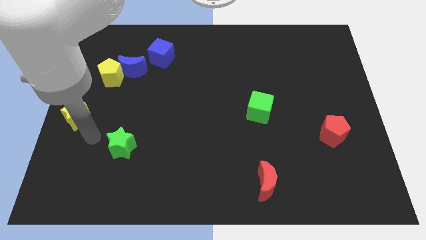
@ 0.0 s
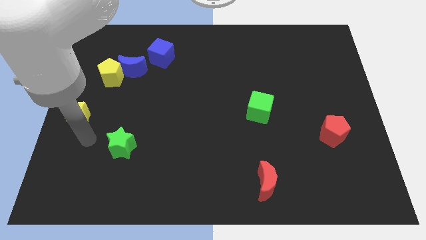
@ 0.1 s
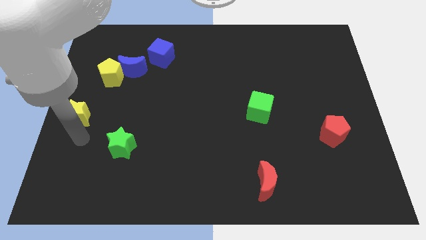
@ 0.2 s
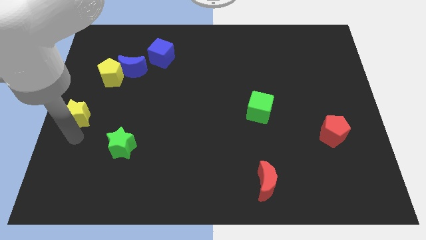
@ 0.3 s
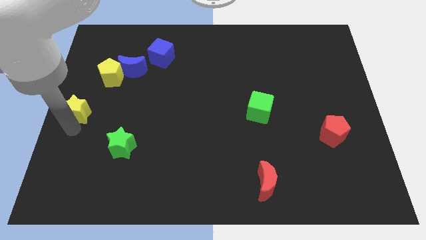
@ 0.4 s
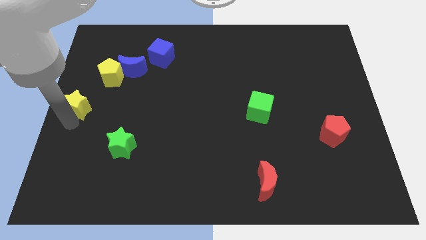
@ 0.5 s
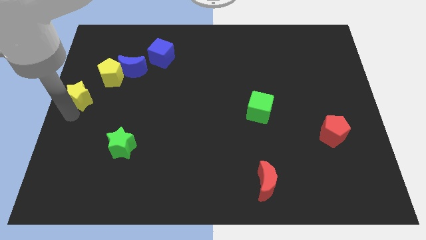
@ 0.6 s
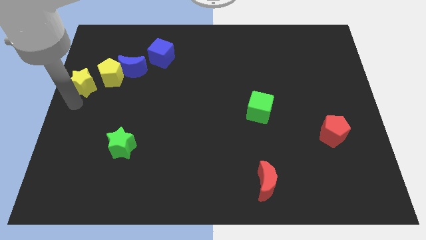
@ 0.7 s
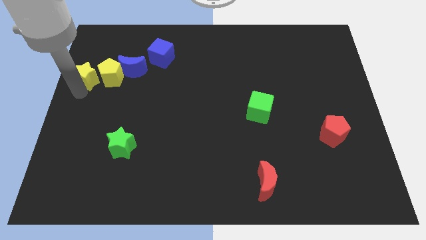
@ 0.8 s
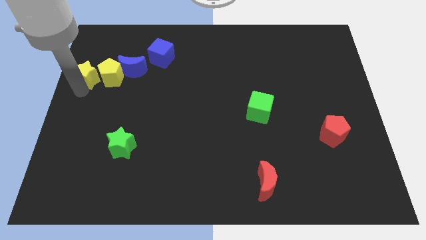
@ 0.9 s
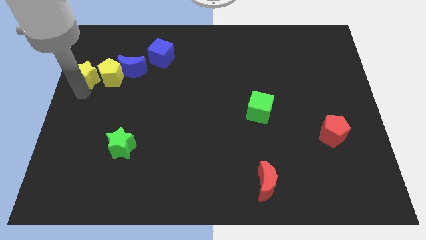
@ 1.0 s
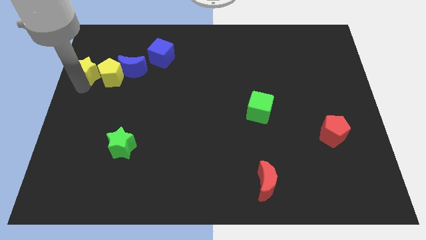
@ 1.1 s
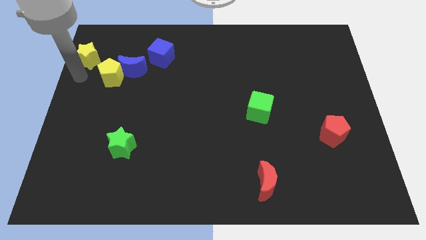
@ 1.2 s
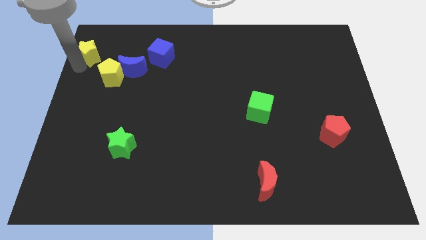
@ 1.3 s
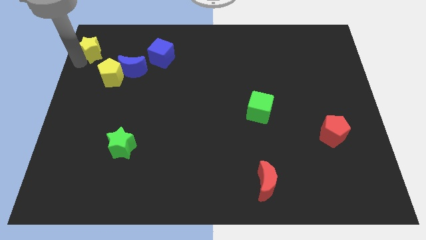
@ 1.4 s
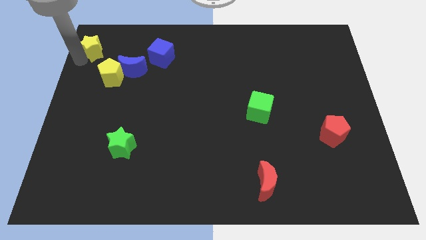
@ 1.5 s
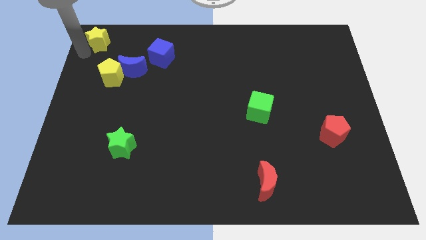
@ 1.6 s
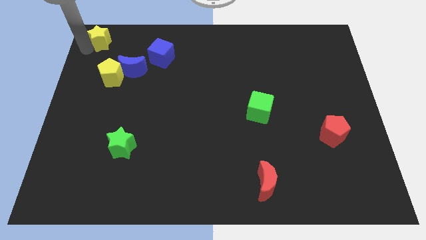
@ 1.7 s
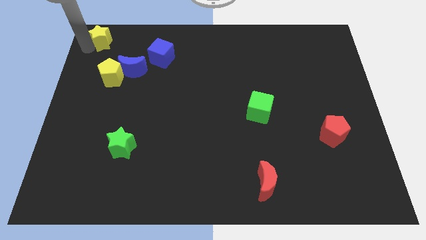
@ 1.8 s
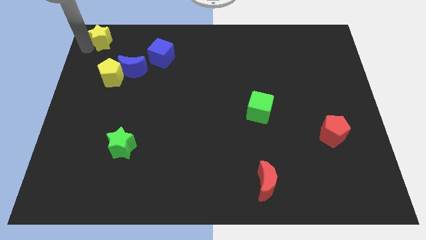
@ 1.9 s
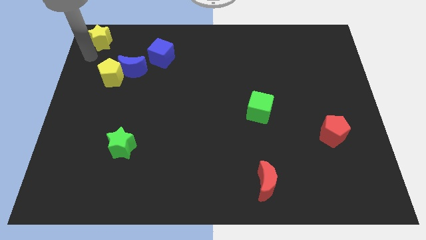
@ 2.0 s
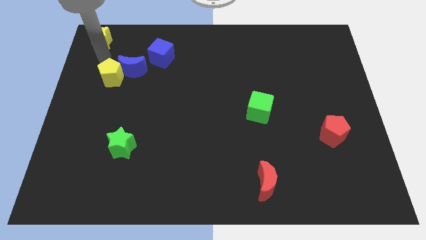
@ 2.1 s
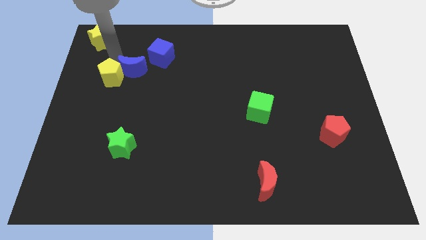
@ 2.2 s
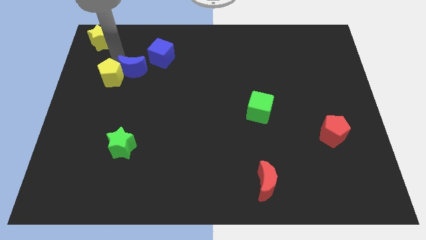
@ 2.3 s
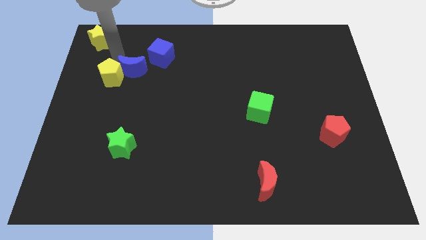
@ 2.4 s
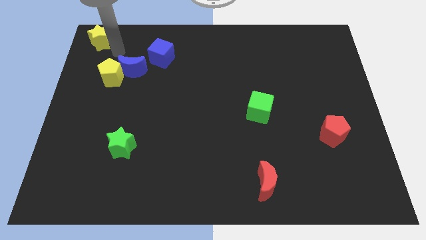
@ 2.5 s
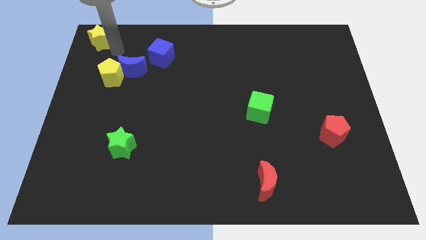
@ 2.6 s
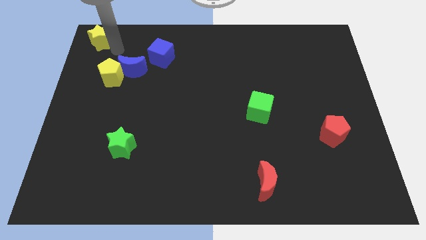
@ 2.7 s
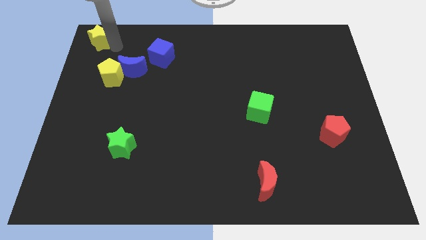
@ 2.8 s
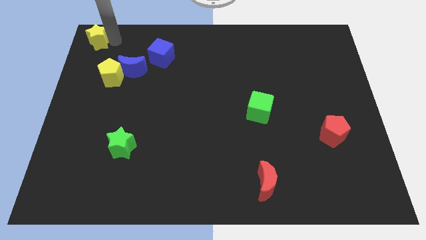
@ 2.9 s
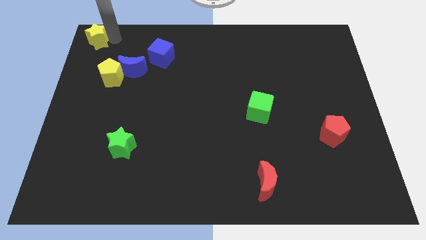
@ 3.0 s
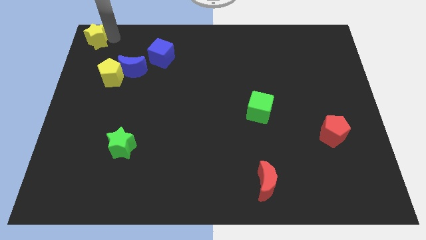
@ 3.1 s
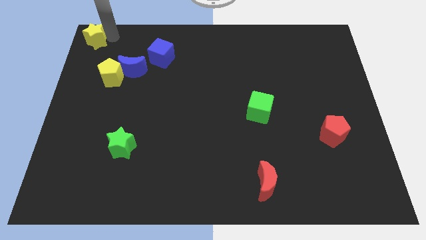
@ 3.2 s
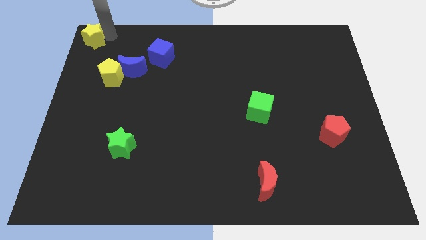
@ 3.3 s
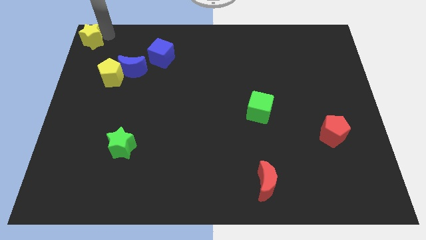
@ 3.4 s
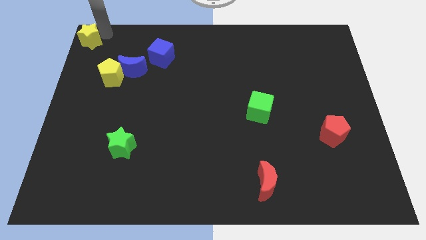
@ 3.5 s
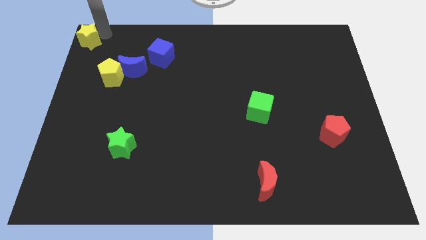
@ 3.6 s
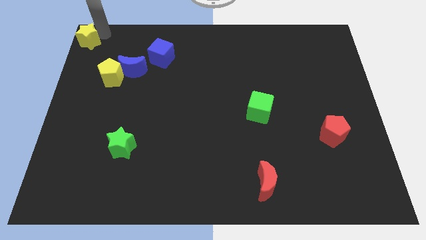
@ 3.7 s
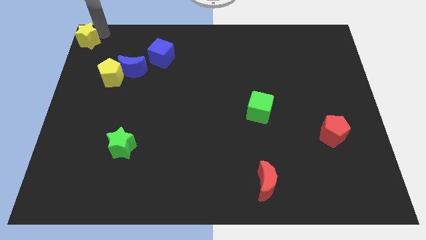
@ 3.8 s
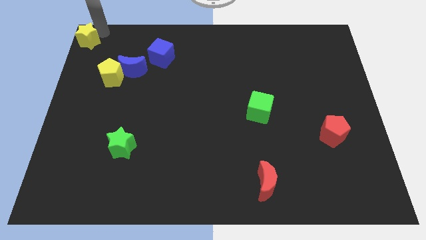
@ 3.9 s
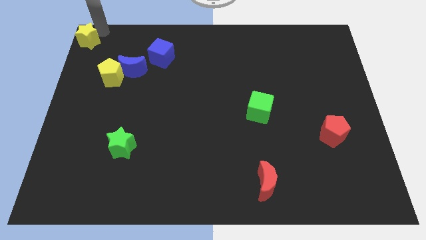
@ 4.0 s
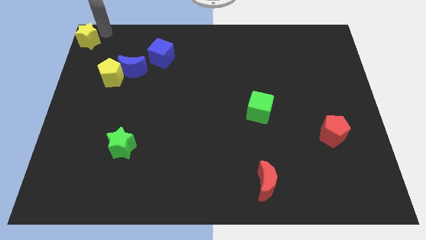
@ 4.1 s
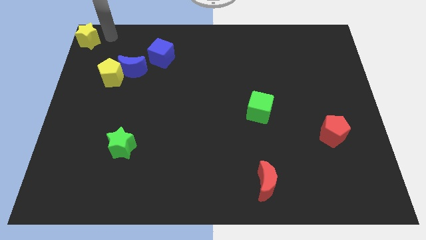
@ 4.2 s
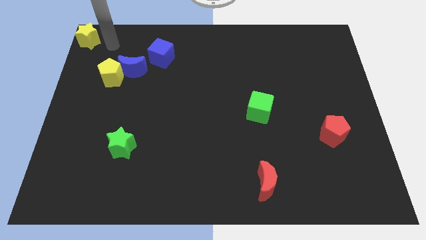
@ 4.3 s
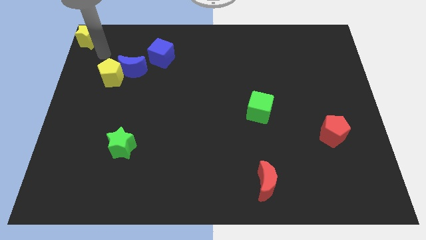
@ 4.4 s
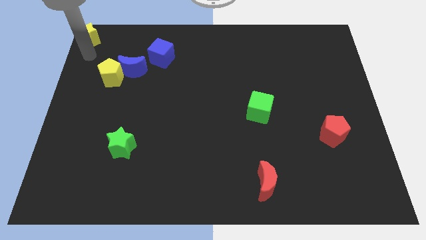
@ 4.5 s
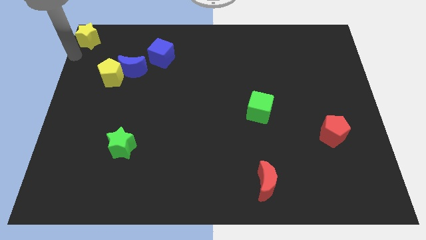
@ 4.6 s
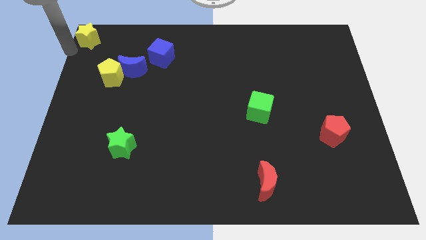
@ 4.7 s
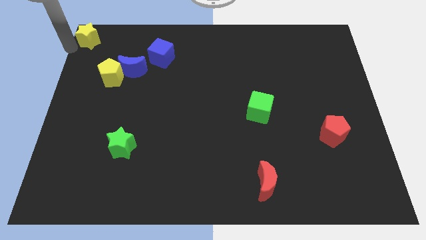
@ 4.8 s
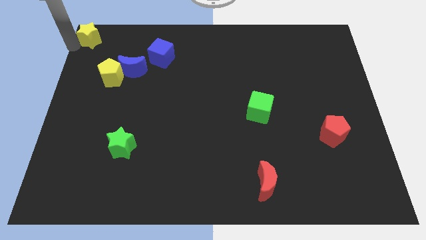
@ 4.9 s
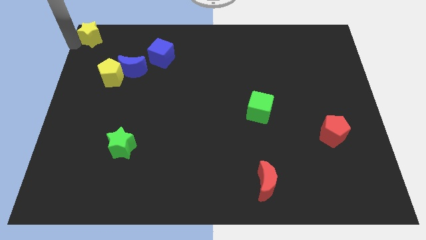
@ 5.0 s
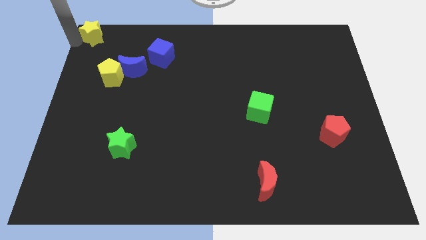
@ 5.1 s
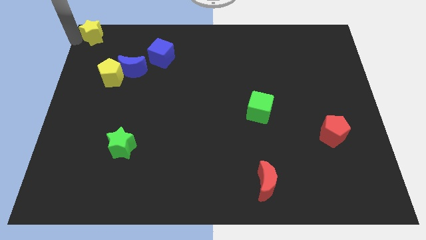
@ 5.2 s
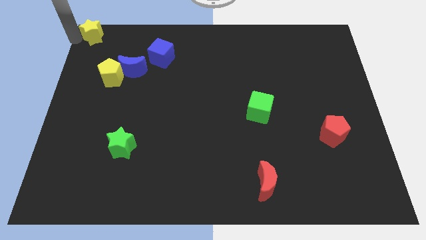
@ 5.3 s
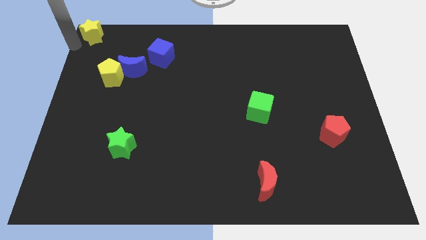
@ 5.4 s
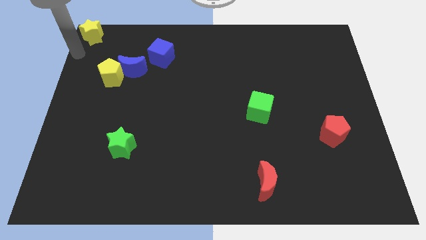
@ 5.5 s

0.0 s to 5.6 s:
put the yellow star diagonally to yellow pentagon

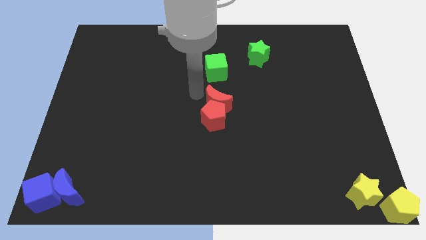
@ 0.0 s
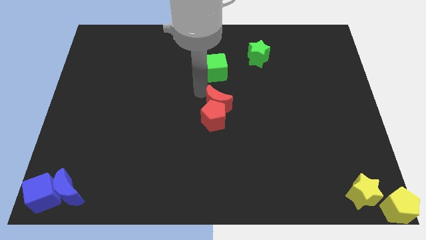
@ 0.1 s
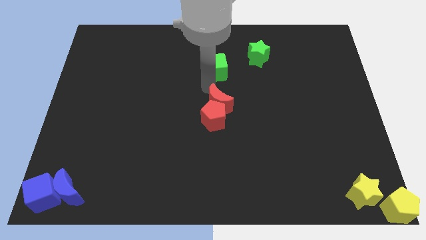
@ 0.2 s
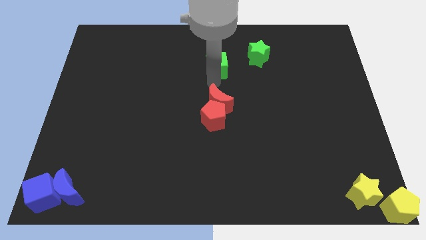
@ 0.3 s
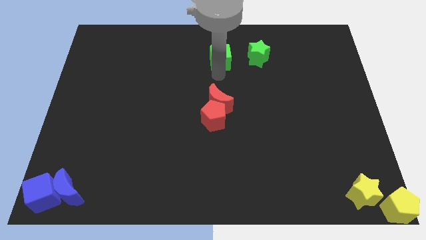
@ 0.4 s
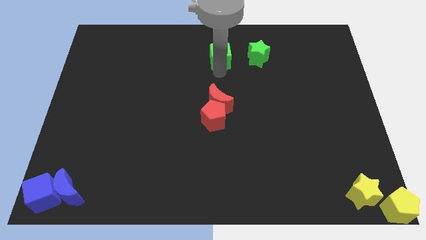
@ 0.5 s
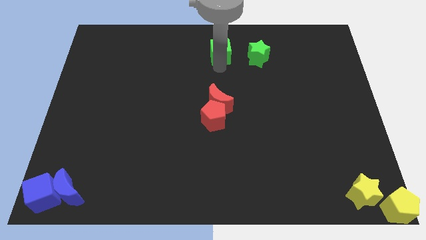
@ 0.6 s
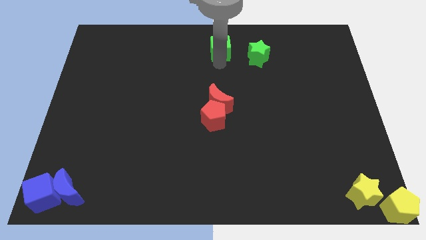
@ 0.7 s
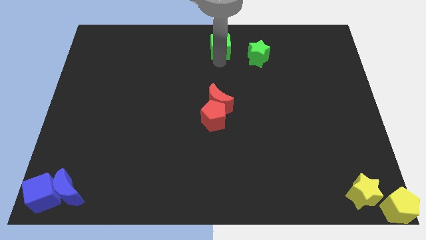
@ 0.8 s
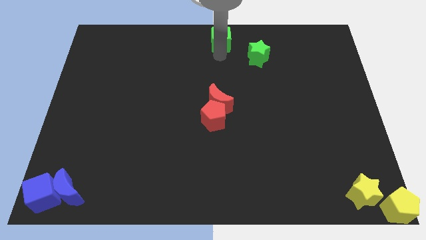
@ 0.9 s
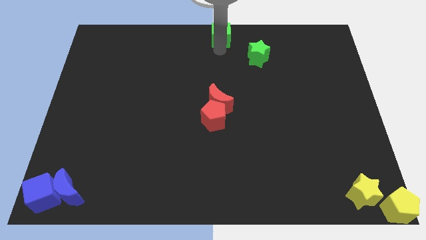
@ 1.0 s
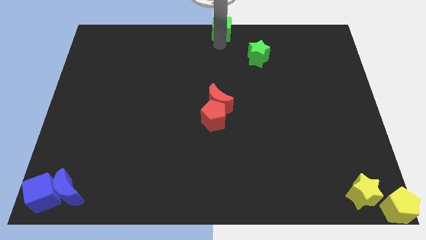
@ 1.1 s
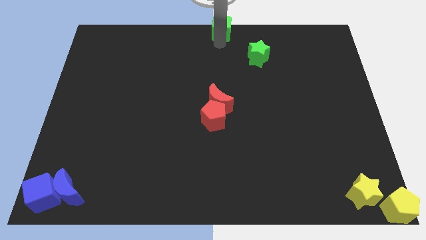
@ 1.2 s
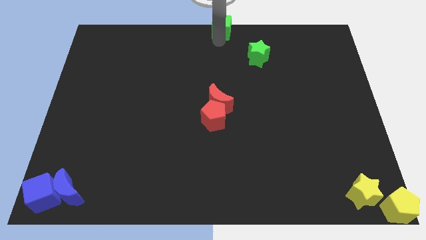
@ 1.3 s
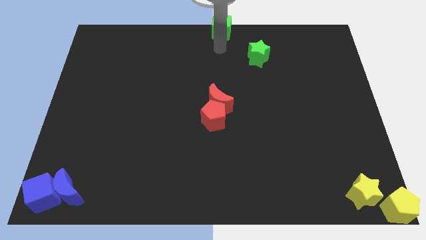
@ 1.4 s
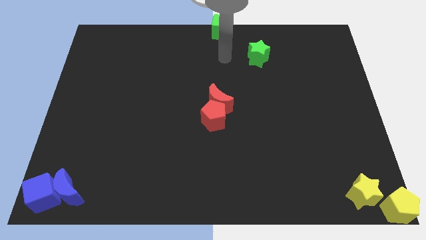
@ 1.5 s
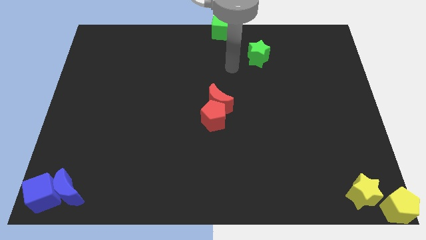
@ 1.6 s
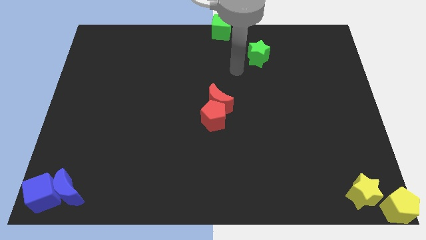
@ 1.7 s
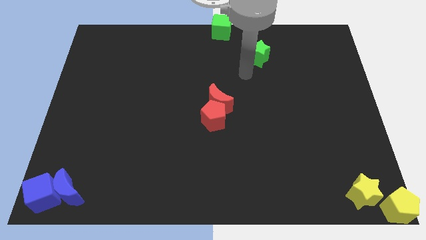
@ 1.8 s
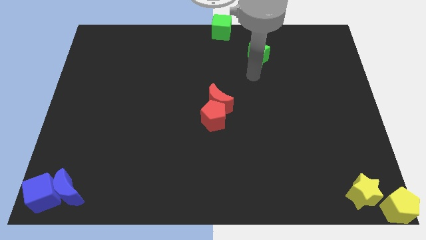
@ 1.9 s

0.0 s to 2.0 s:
move the green cube to the top center of the board

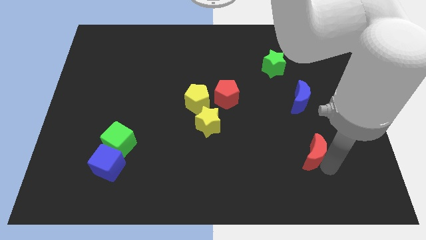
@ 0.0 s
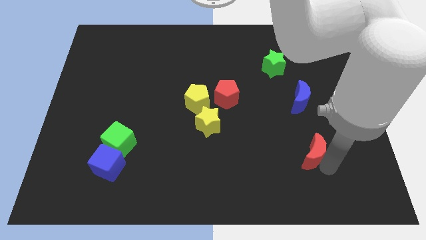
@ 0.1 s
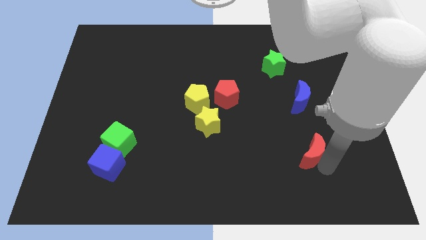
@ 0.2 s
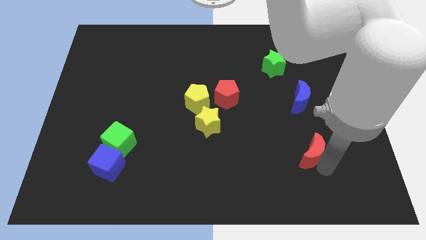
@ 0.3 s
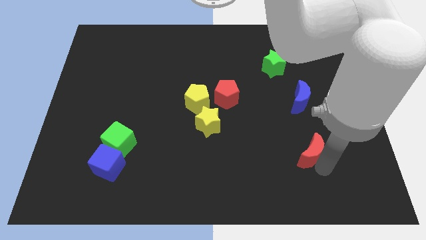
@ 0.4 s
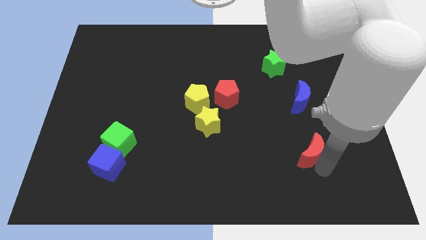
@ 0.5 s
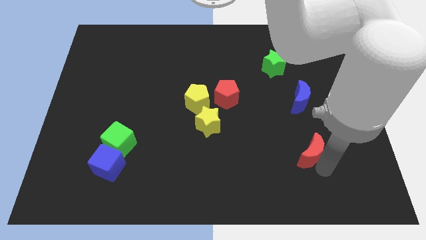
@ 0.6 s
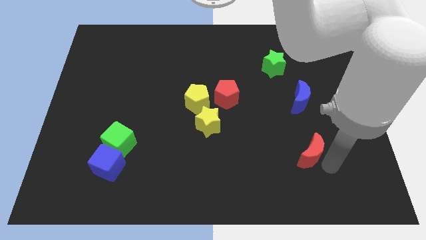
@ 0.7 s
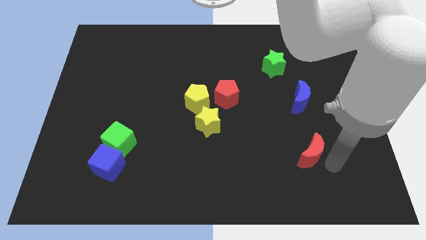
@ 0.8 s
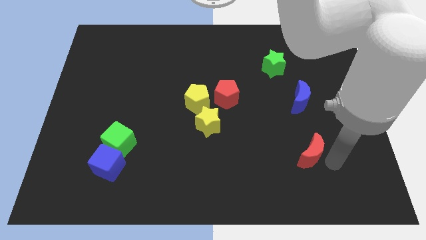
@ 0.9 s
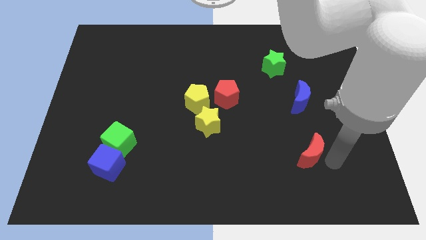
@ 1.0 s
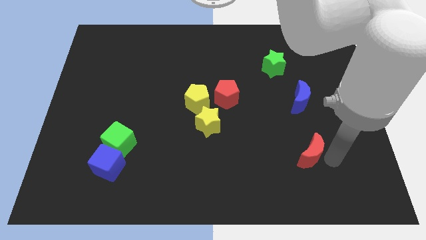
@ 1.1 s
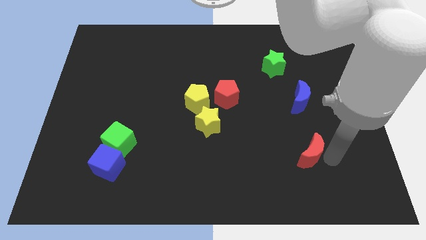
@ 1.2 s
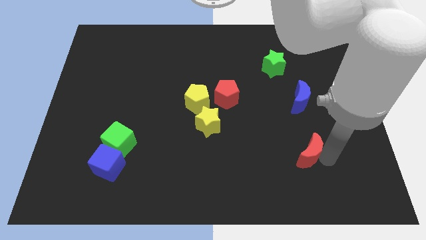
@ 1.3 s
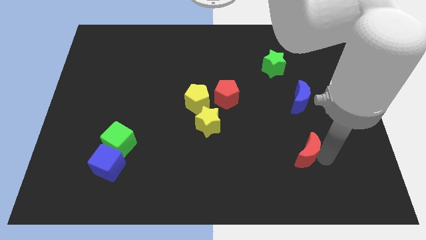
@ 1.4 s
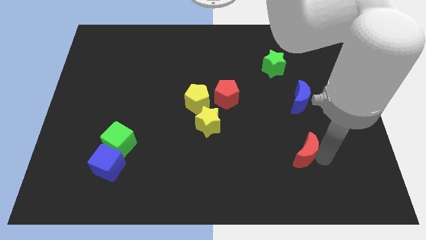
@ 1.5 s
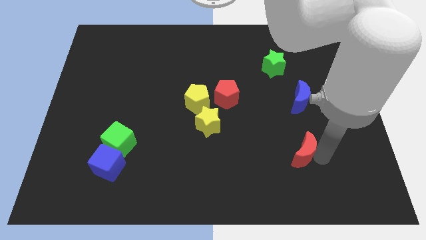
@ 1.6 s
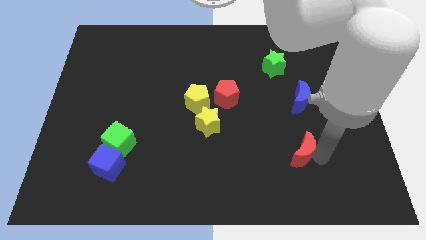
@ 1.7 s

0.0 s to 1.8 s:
place red moon to the bottom of blue moon
